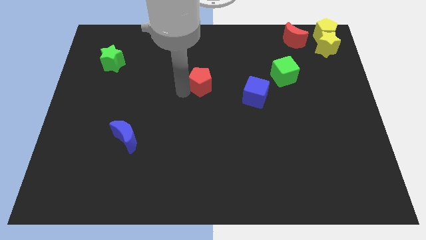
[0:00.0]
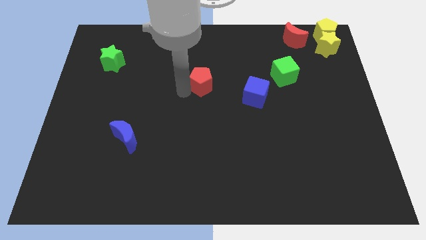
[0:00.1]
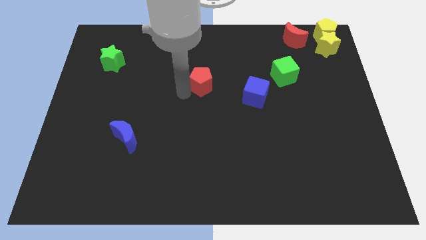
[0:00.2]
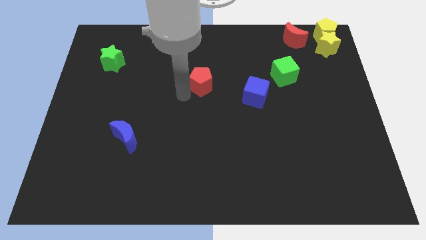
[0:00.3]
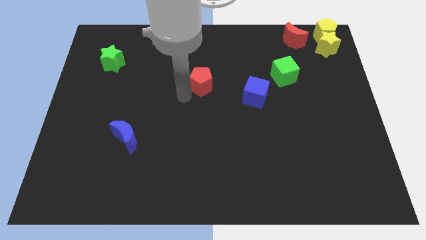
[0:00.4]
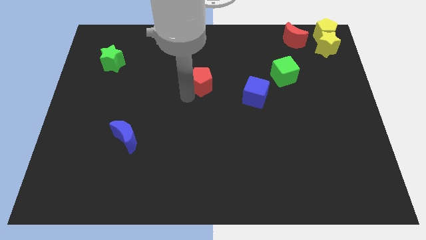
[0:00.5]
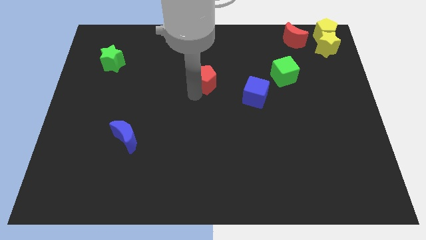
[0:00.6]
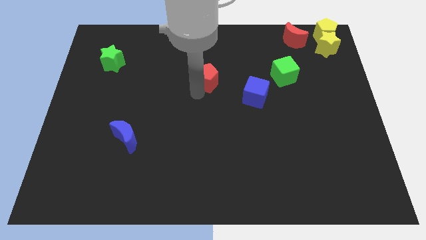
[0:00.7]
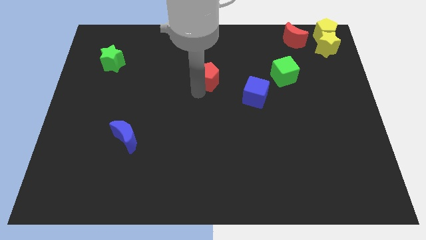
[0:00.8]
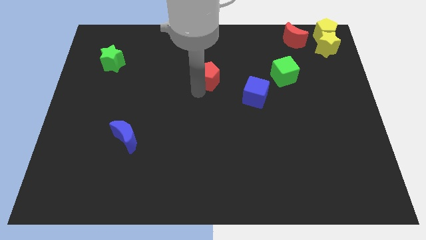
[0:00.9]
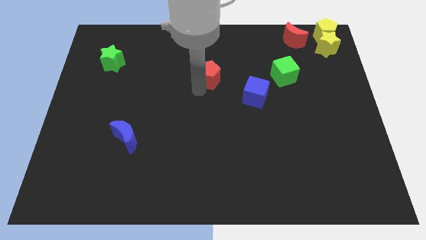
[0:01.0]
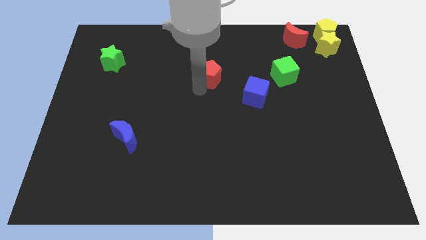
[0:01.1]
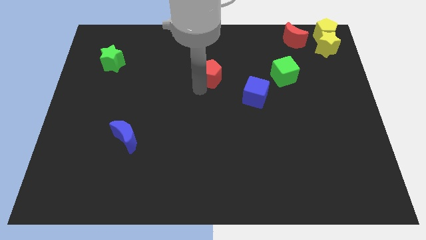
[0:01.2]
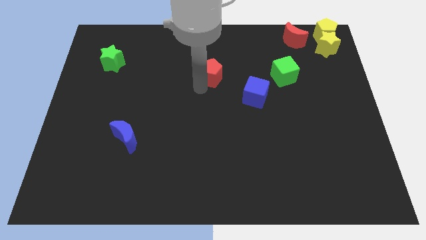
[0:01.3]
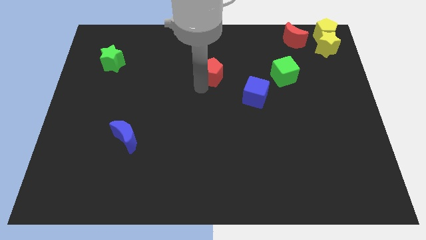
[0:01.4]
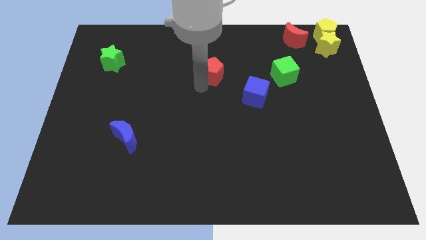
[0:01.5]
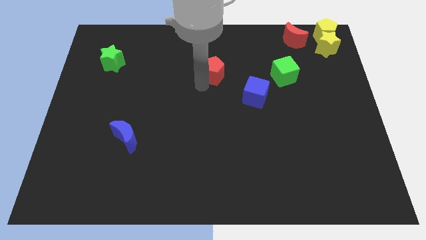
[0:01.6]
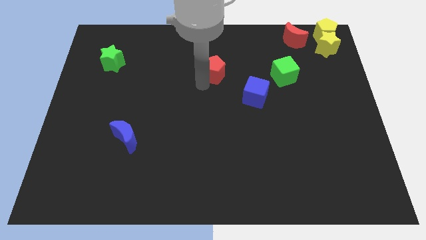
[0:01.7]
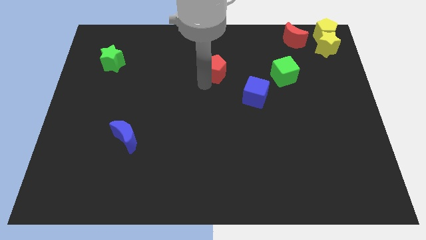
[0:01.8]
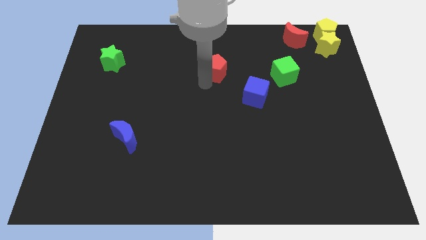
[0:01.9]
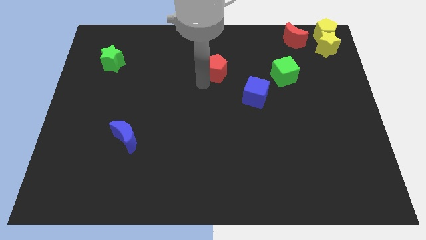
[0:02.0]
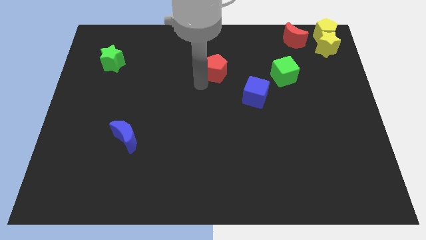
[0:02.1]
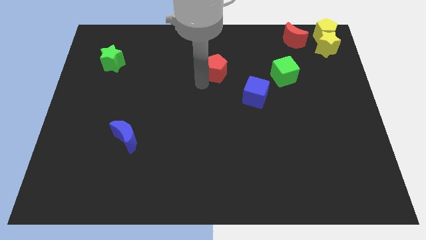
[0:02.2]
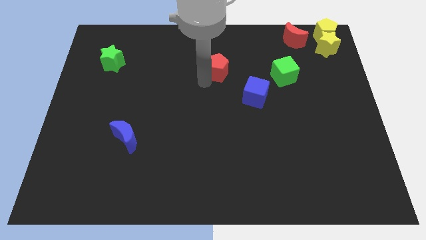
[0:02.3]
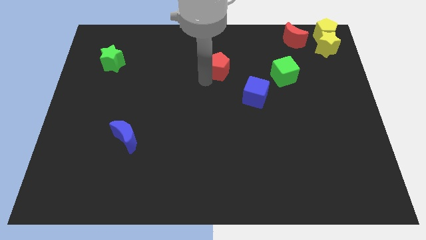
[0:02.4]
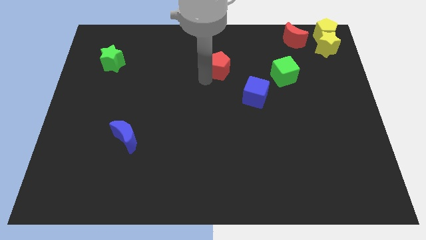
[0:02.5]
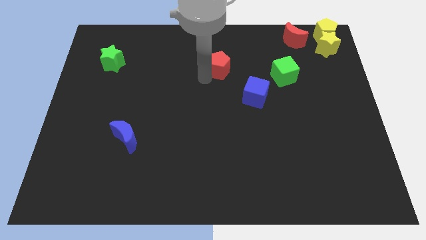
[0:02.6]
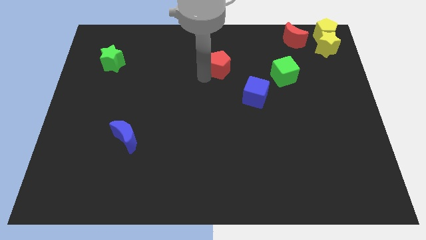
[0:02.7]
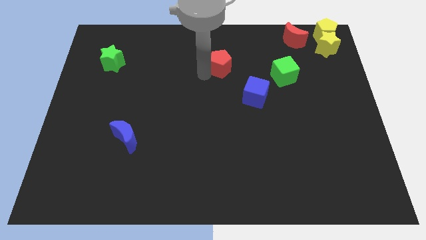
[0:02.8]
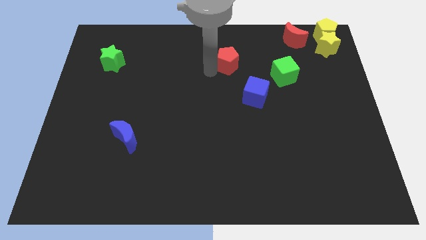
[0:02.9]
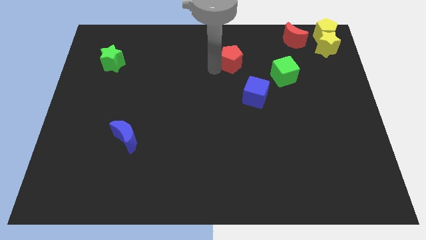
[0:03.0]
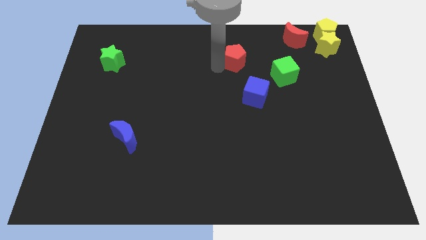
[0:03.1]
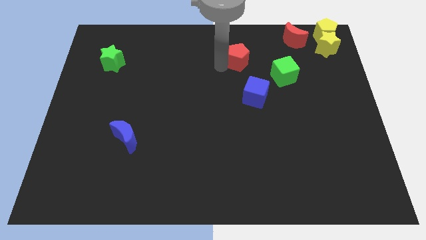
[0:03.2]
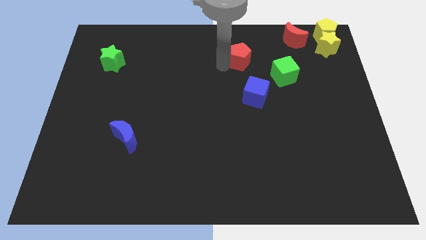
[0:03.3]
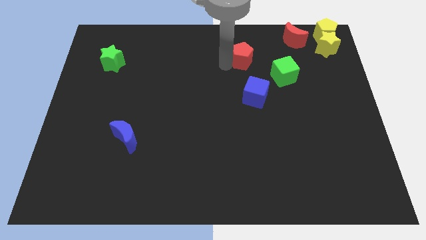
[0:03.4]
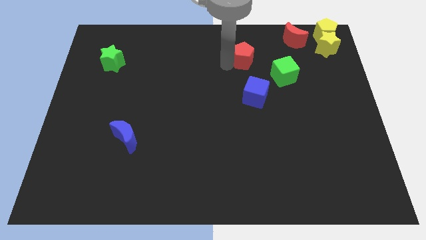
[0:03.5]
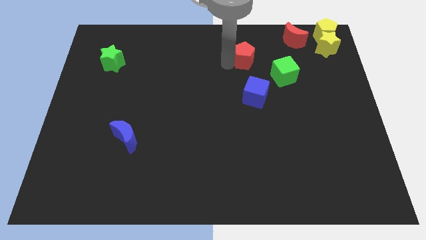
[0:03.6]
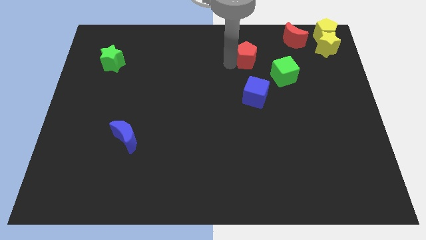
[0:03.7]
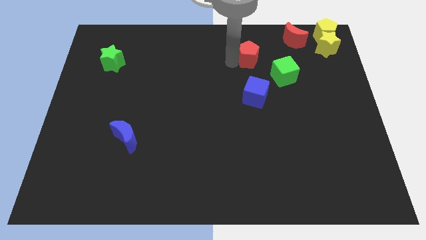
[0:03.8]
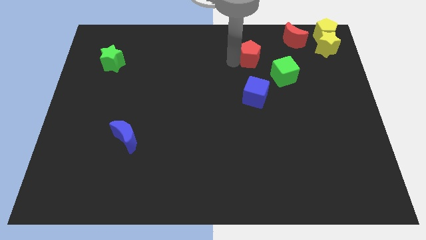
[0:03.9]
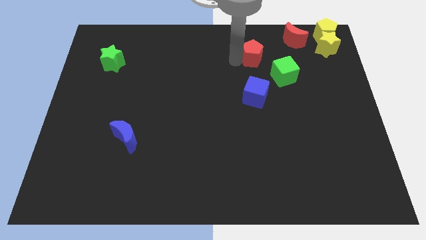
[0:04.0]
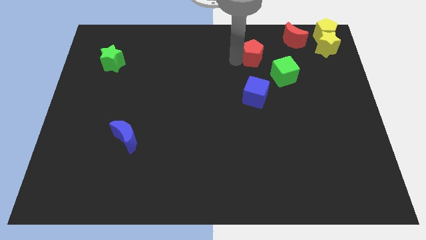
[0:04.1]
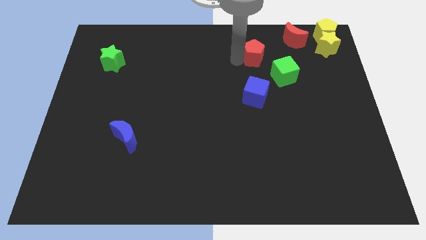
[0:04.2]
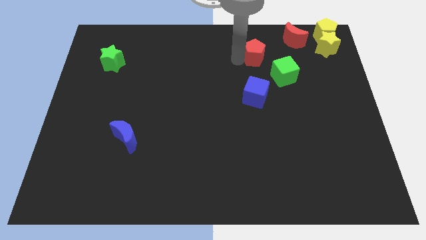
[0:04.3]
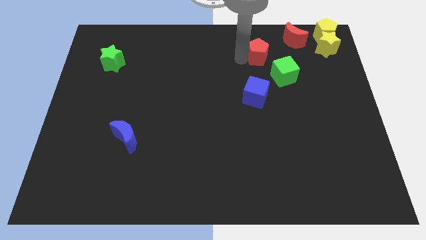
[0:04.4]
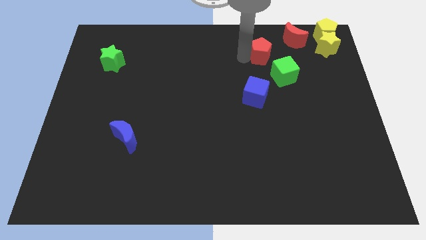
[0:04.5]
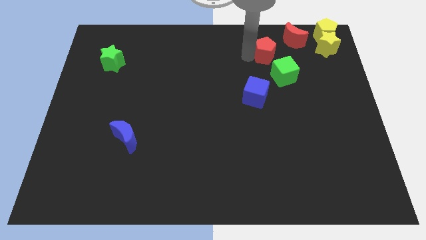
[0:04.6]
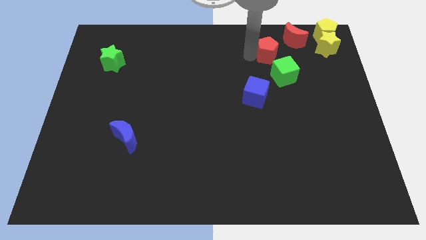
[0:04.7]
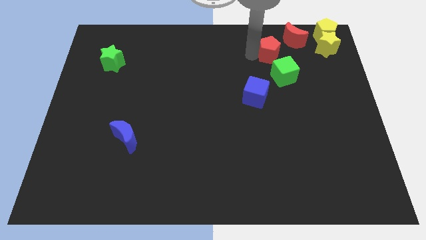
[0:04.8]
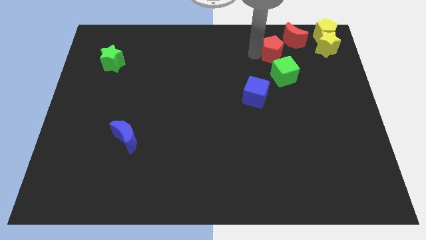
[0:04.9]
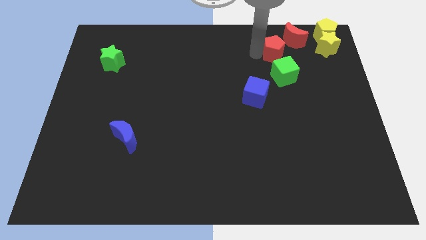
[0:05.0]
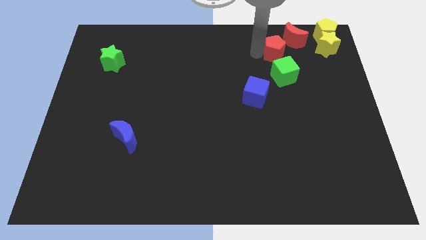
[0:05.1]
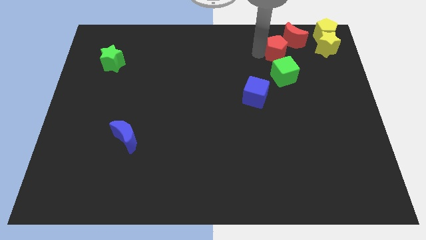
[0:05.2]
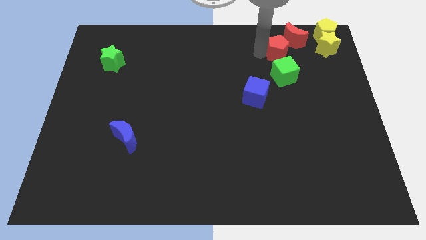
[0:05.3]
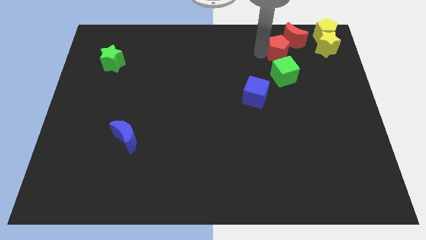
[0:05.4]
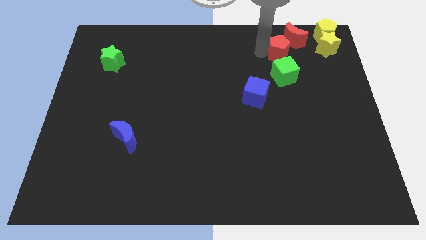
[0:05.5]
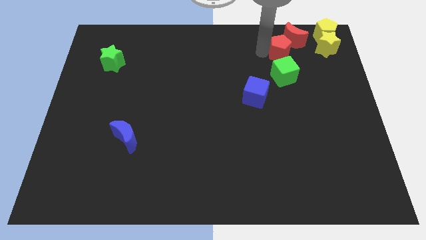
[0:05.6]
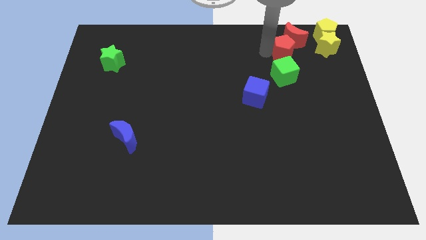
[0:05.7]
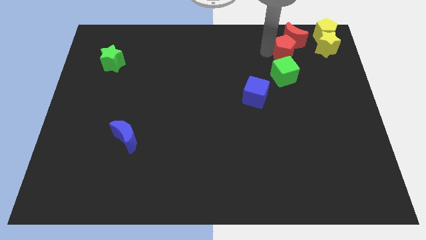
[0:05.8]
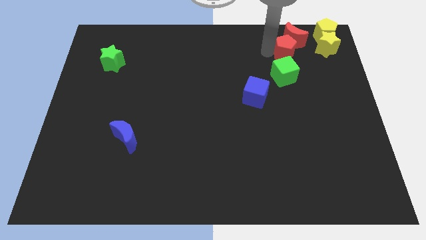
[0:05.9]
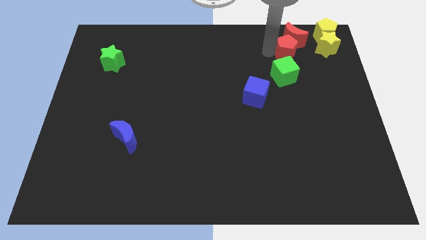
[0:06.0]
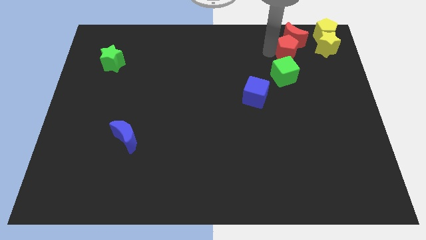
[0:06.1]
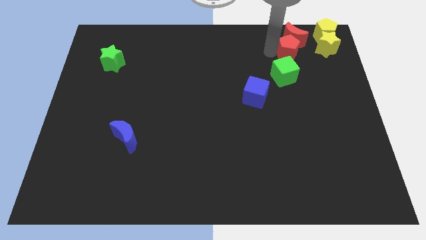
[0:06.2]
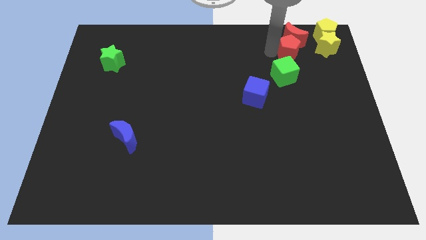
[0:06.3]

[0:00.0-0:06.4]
place red pentagon below red moon

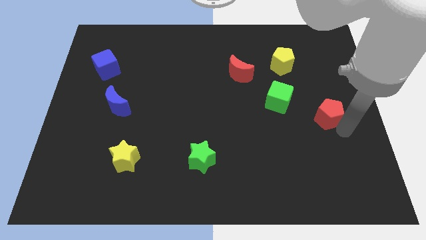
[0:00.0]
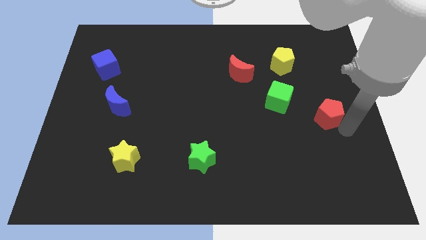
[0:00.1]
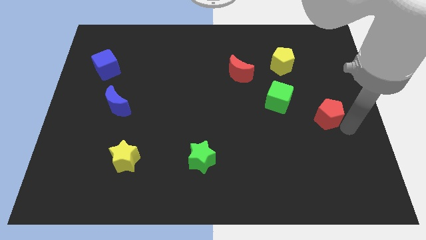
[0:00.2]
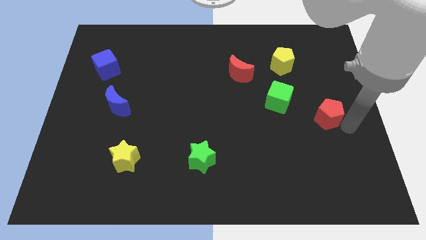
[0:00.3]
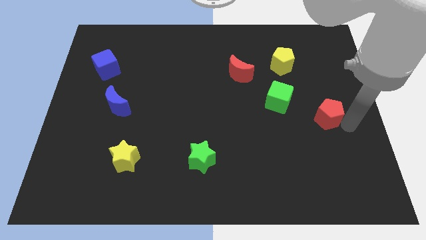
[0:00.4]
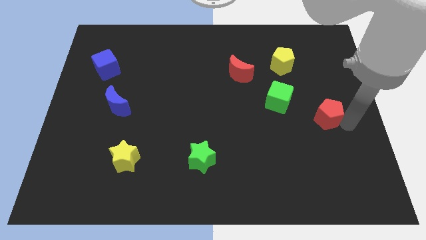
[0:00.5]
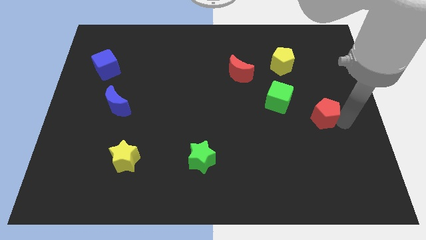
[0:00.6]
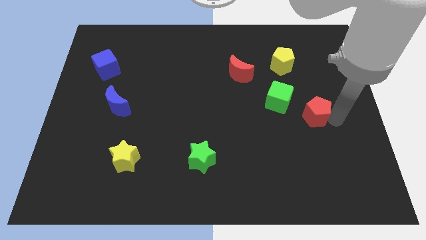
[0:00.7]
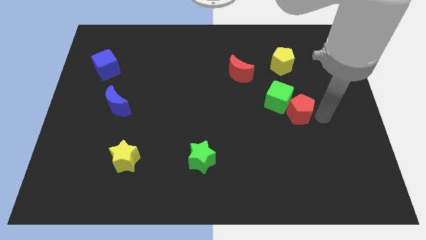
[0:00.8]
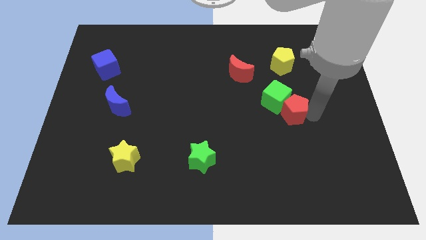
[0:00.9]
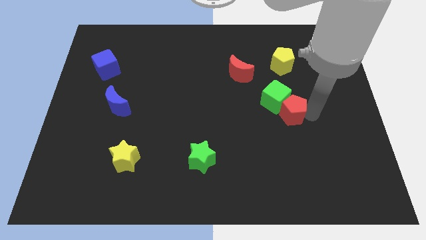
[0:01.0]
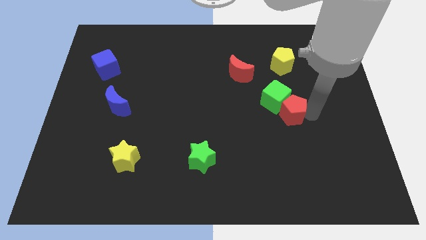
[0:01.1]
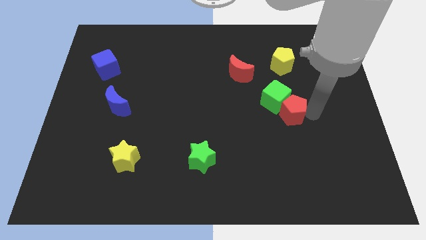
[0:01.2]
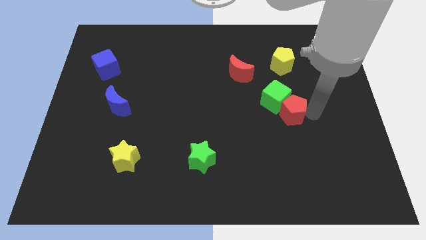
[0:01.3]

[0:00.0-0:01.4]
move the red pentagon towards left to the green cube

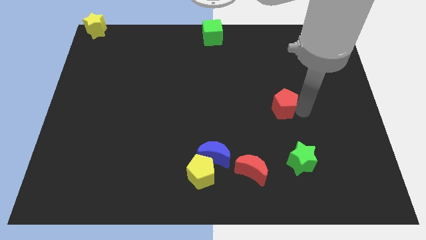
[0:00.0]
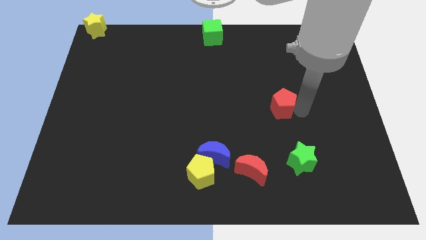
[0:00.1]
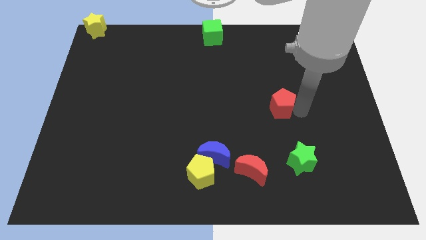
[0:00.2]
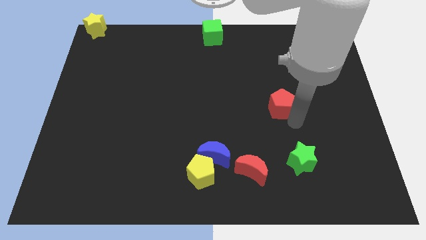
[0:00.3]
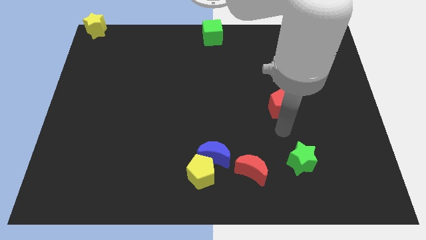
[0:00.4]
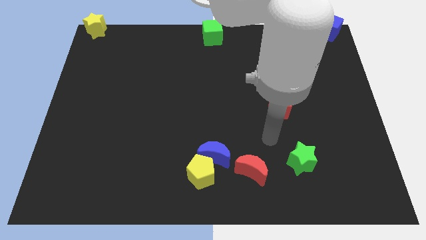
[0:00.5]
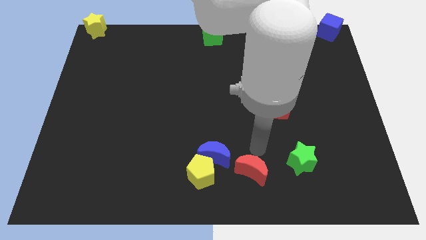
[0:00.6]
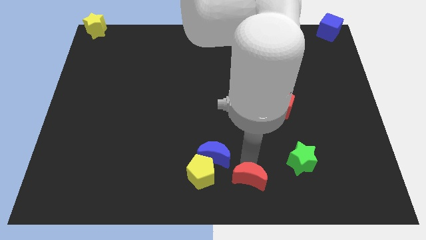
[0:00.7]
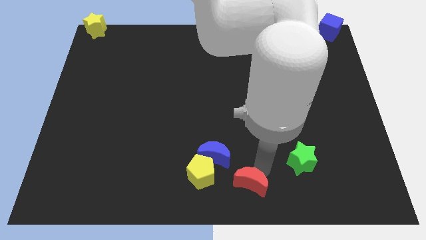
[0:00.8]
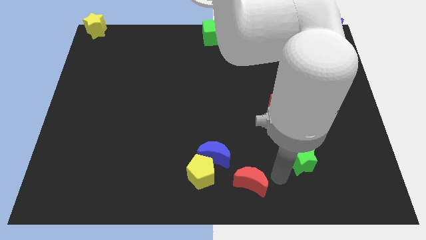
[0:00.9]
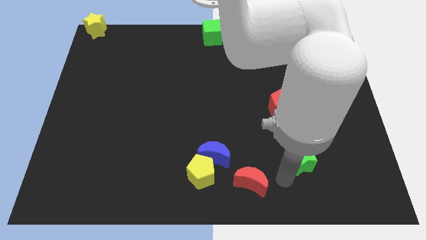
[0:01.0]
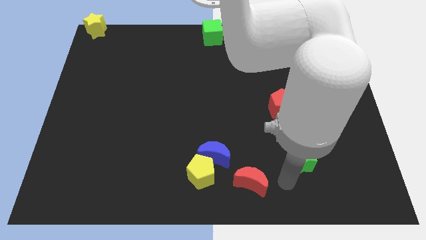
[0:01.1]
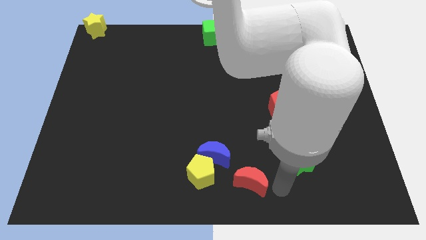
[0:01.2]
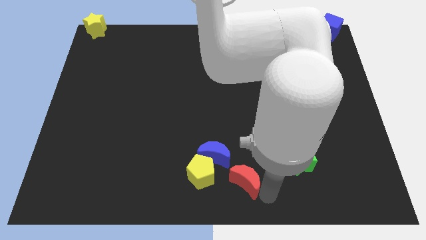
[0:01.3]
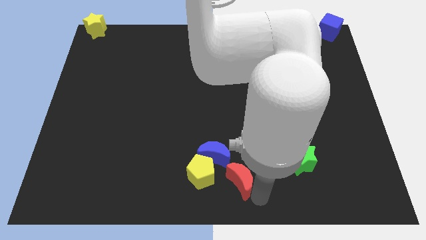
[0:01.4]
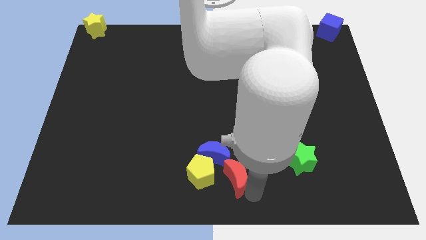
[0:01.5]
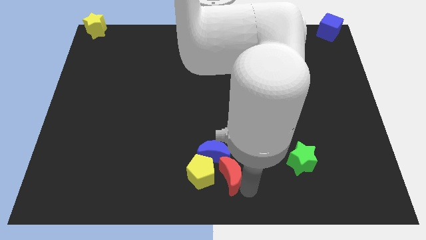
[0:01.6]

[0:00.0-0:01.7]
move the red moon into the blue moon
